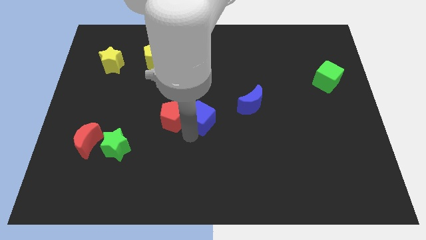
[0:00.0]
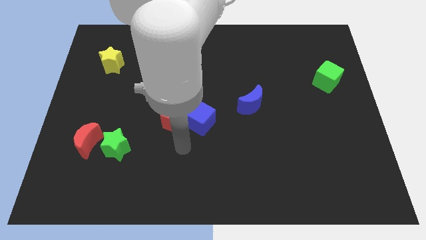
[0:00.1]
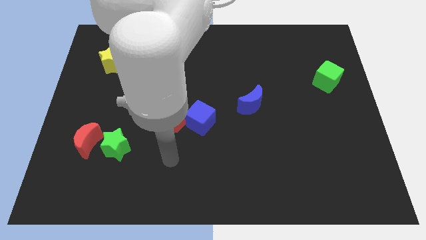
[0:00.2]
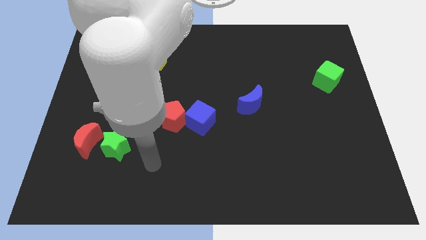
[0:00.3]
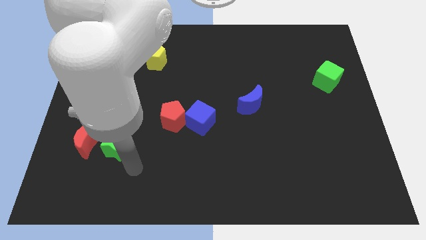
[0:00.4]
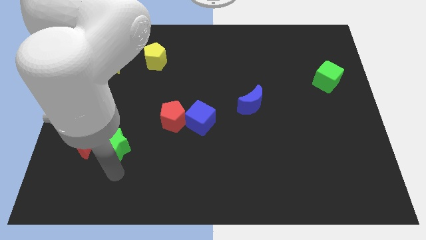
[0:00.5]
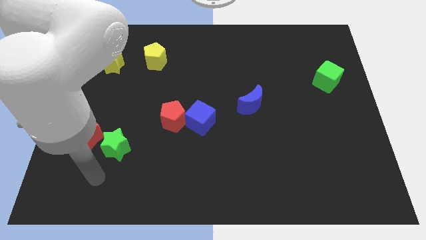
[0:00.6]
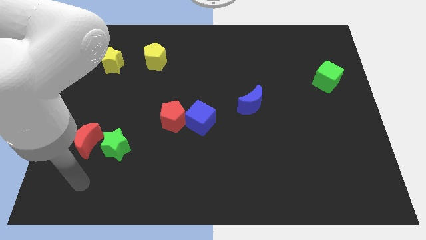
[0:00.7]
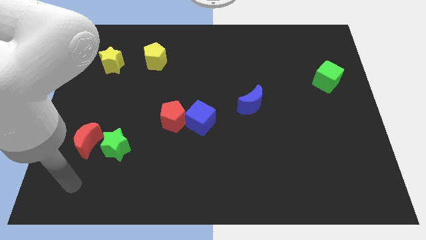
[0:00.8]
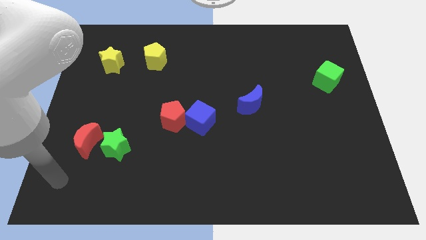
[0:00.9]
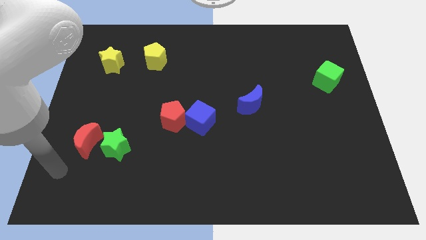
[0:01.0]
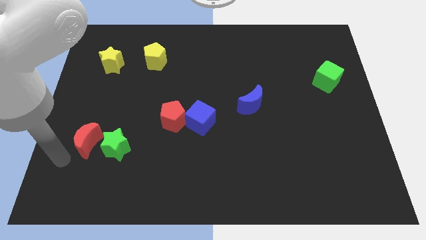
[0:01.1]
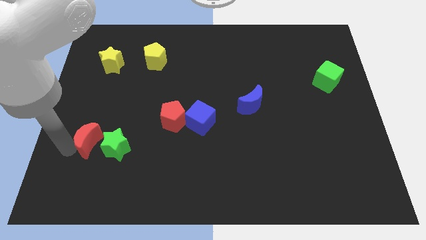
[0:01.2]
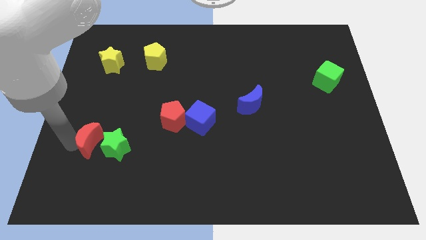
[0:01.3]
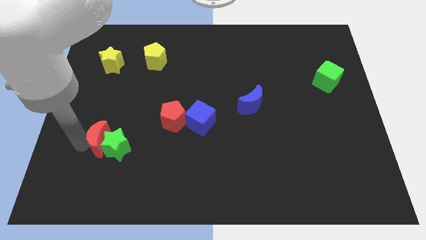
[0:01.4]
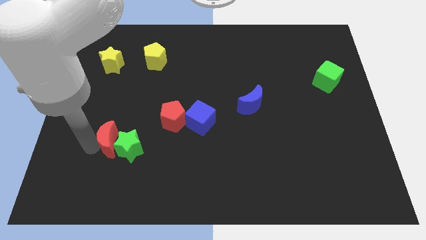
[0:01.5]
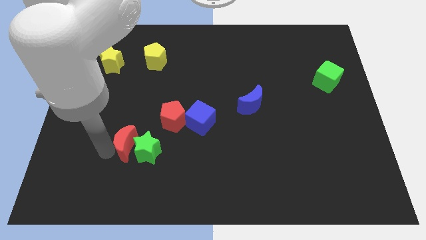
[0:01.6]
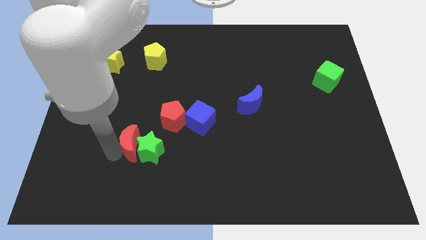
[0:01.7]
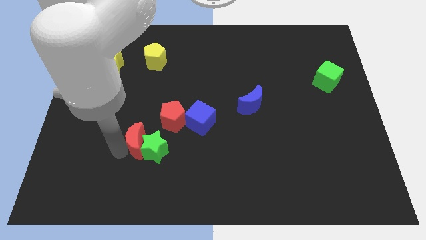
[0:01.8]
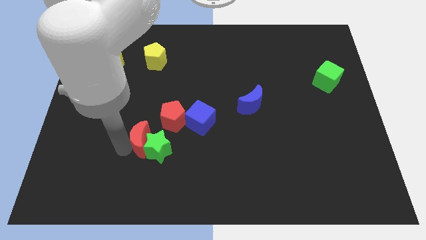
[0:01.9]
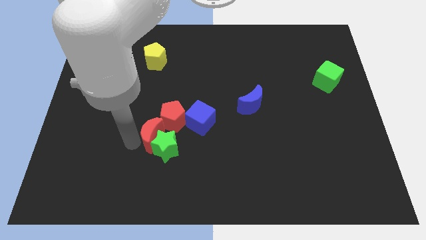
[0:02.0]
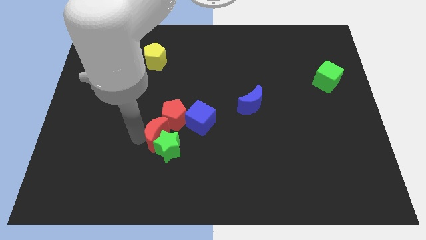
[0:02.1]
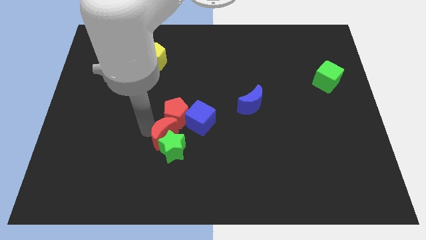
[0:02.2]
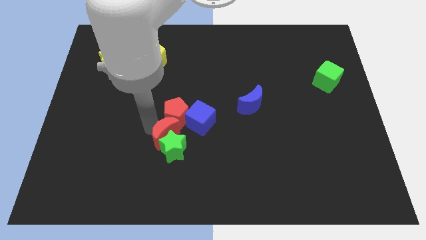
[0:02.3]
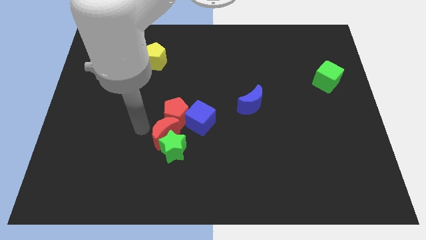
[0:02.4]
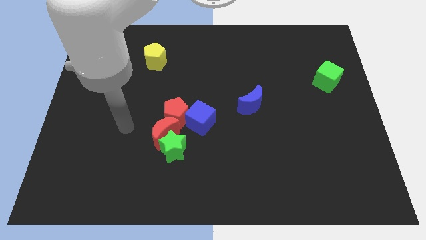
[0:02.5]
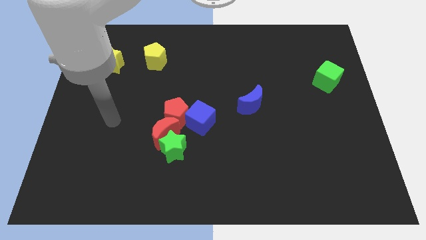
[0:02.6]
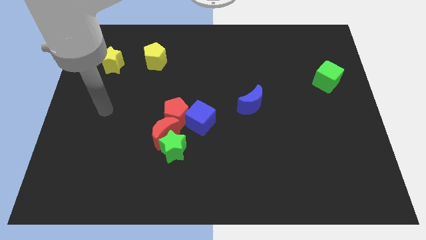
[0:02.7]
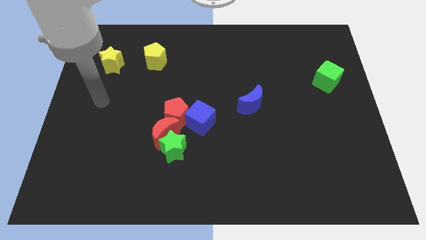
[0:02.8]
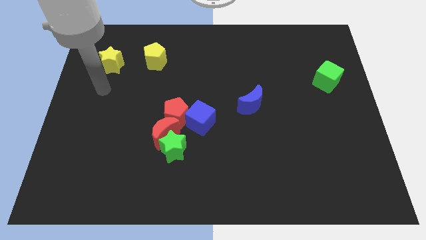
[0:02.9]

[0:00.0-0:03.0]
push the red crescent and green star towards the right side of the board

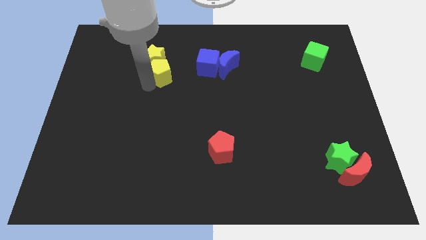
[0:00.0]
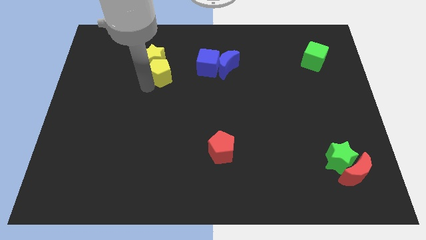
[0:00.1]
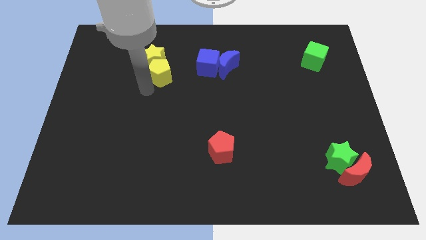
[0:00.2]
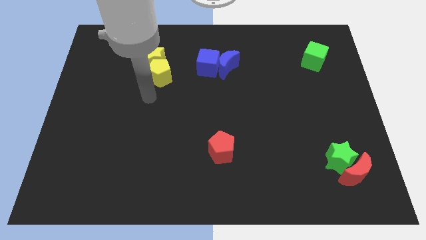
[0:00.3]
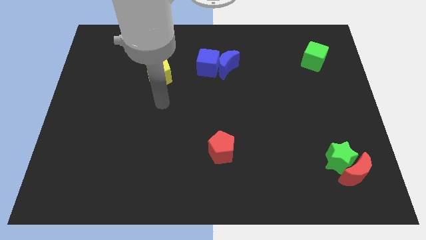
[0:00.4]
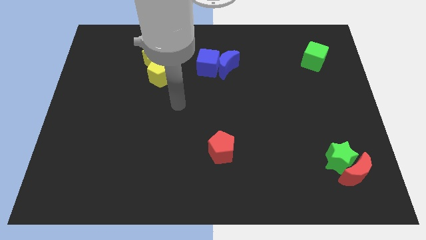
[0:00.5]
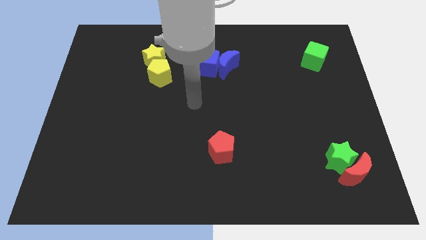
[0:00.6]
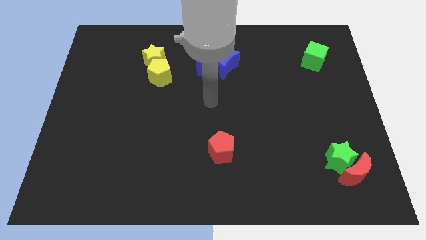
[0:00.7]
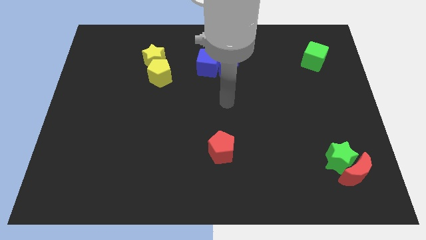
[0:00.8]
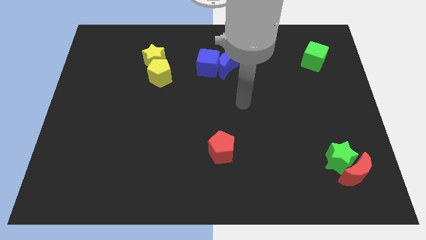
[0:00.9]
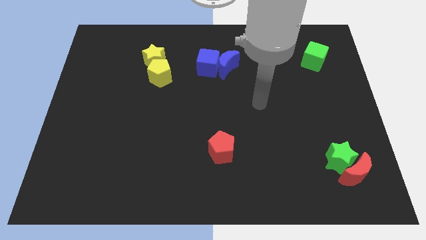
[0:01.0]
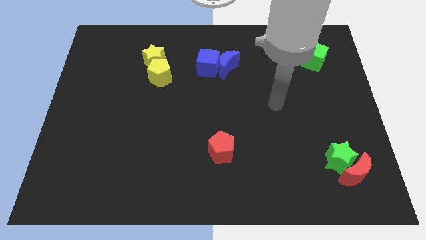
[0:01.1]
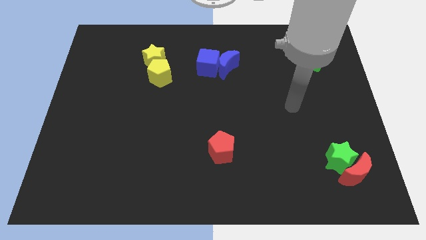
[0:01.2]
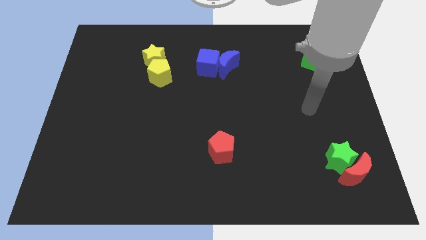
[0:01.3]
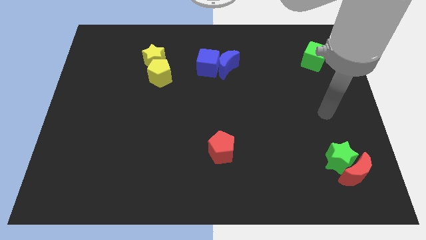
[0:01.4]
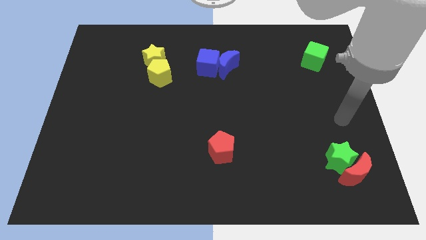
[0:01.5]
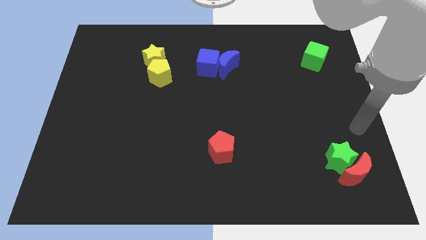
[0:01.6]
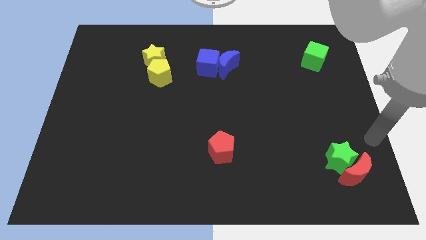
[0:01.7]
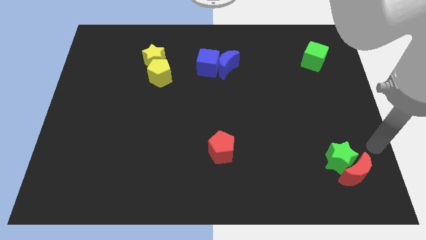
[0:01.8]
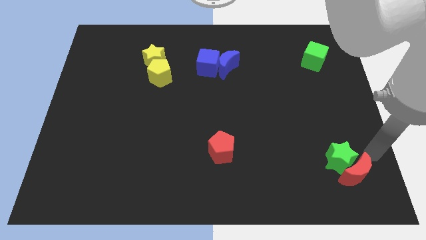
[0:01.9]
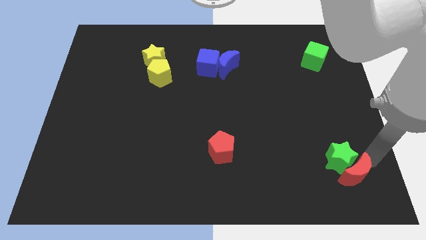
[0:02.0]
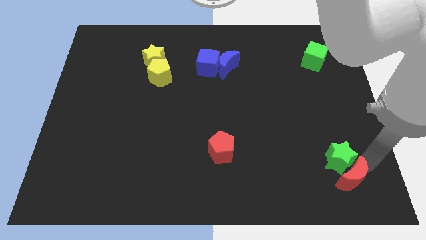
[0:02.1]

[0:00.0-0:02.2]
move the arm away from the yellow blocks

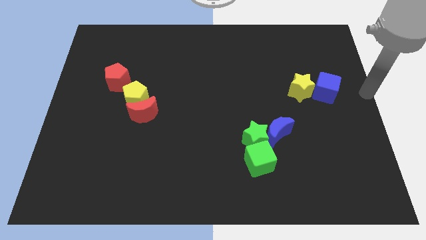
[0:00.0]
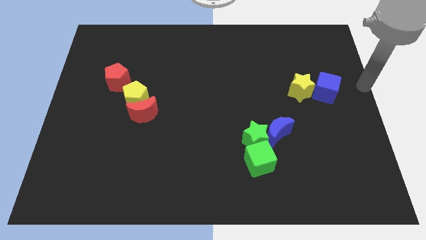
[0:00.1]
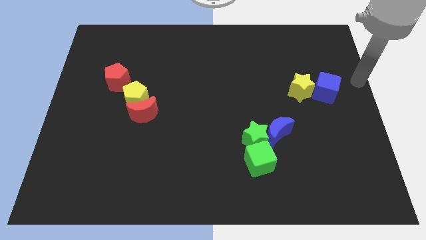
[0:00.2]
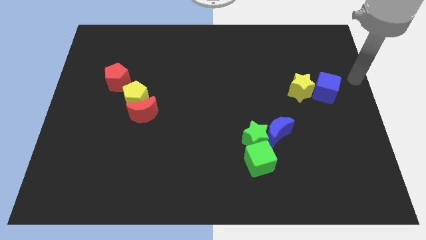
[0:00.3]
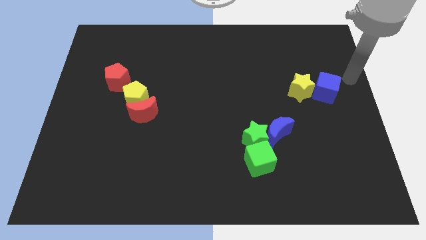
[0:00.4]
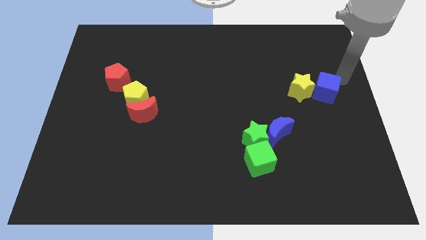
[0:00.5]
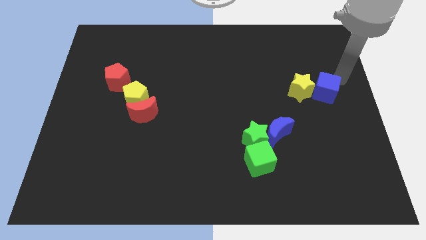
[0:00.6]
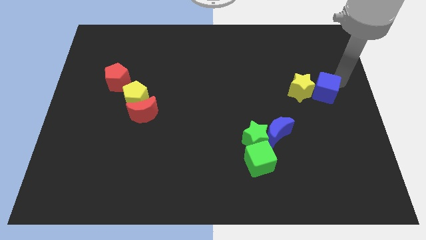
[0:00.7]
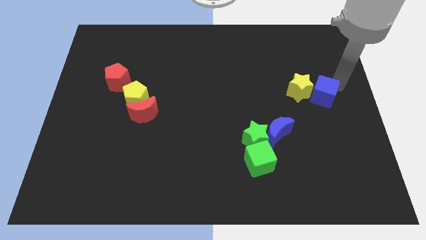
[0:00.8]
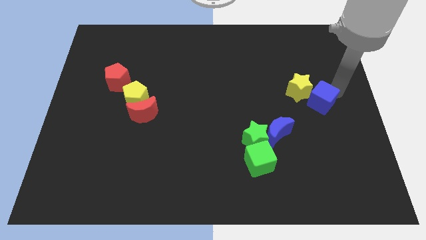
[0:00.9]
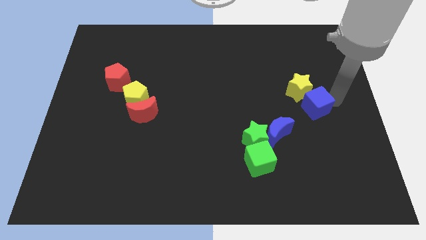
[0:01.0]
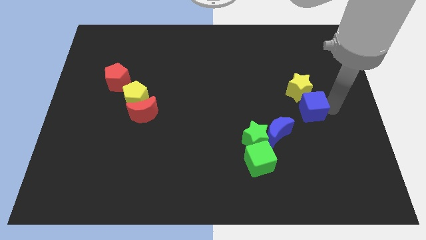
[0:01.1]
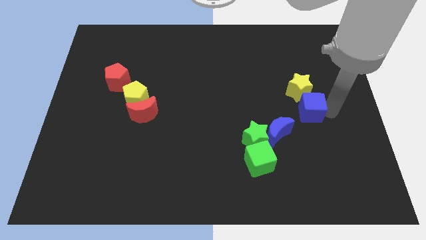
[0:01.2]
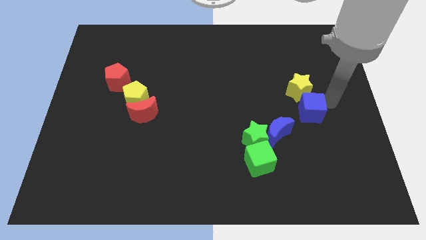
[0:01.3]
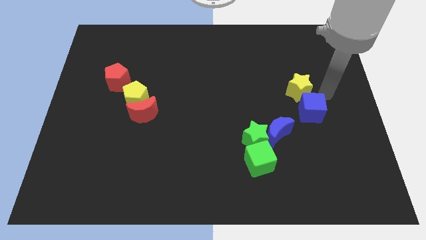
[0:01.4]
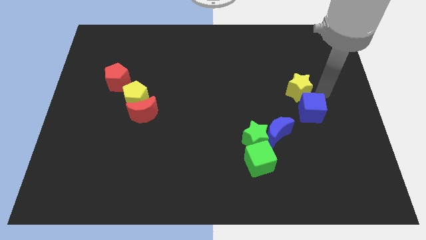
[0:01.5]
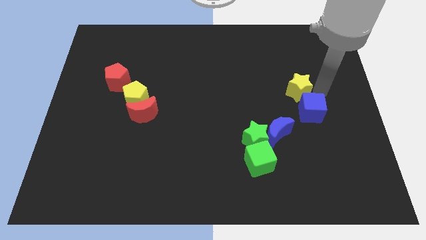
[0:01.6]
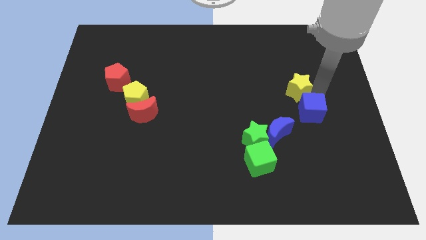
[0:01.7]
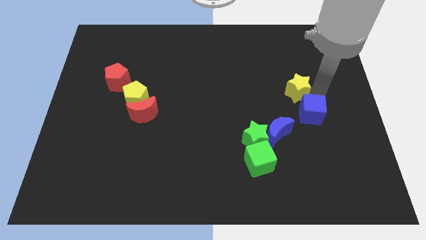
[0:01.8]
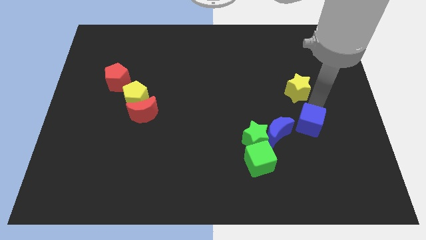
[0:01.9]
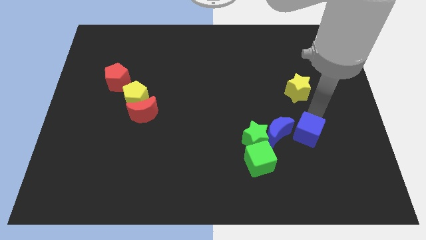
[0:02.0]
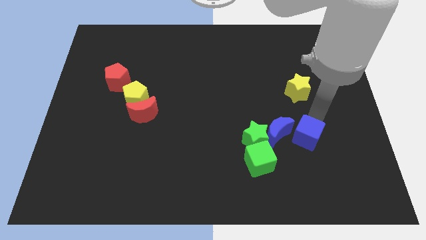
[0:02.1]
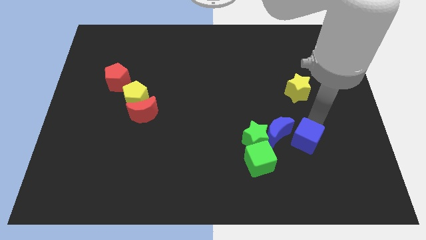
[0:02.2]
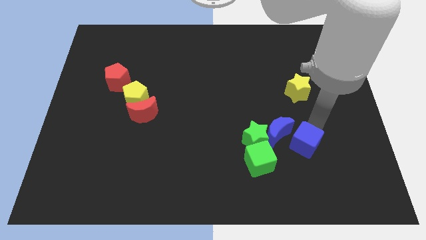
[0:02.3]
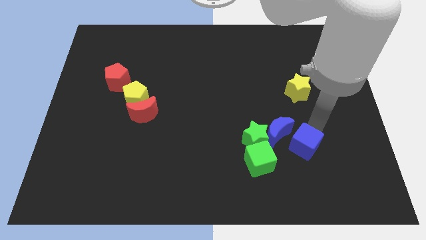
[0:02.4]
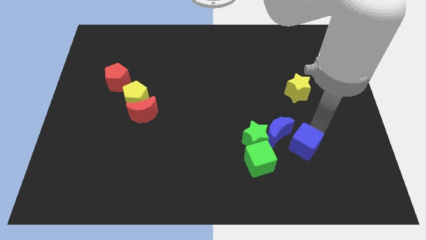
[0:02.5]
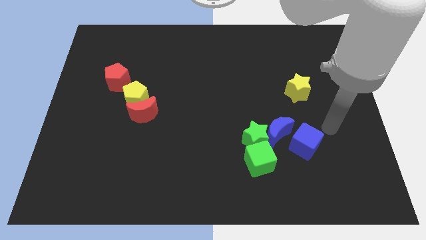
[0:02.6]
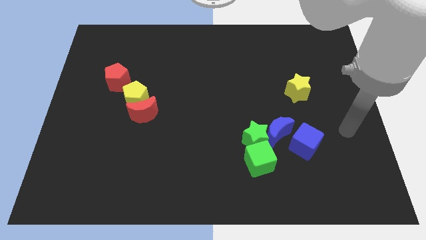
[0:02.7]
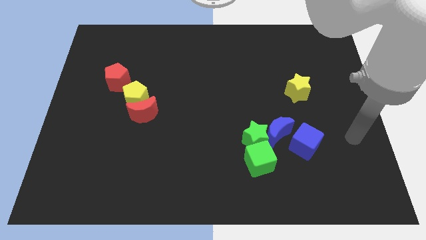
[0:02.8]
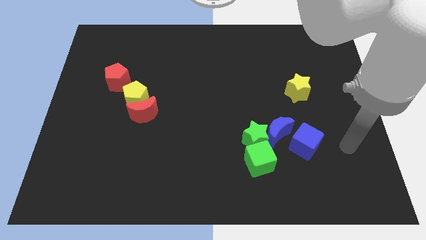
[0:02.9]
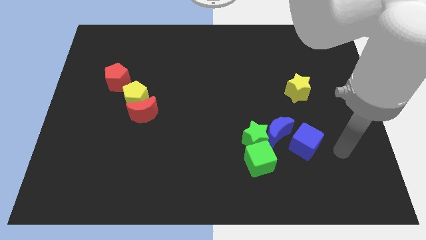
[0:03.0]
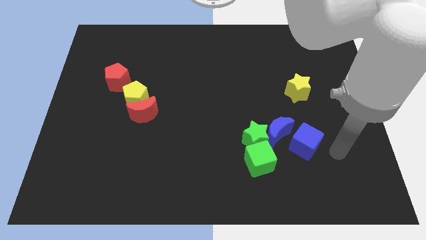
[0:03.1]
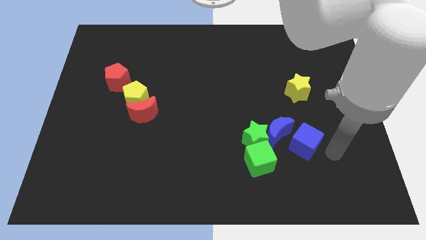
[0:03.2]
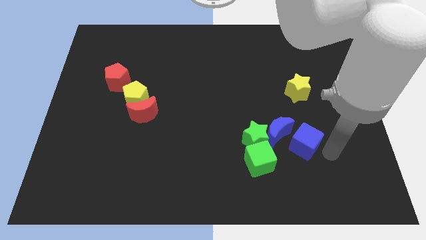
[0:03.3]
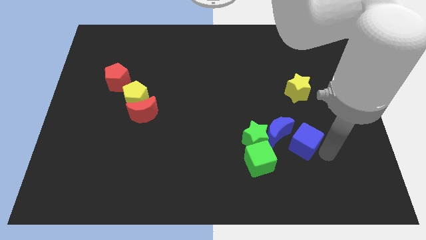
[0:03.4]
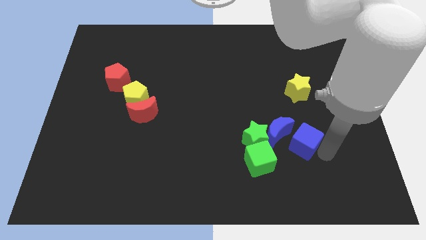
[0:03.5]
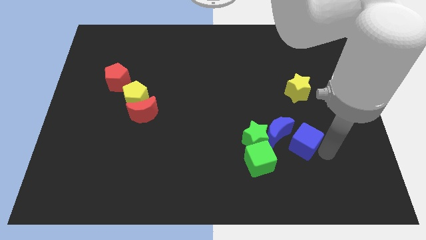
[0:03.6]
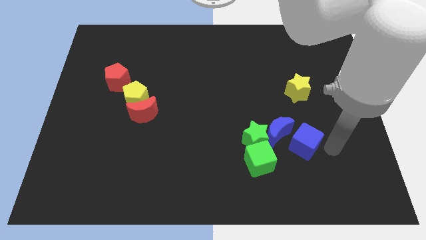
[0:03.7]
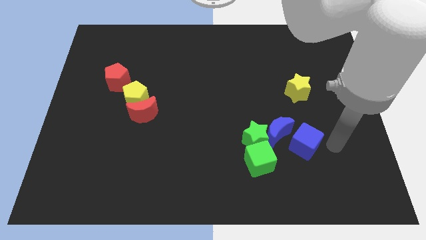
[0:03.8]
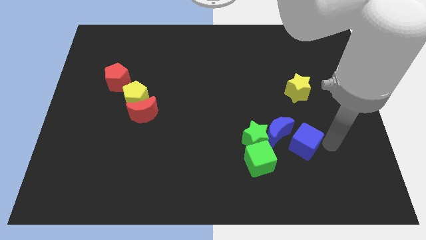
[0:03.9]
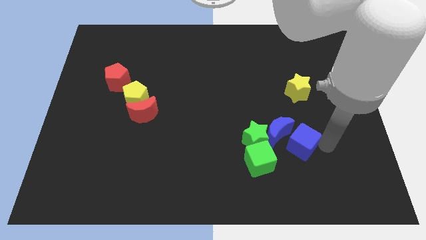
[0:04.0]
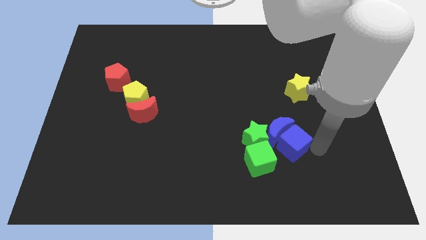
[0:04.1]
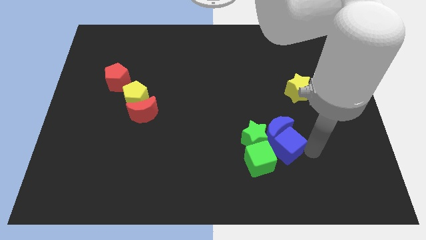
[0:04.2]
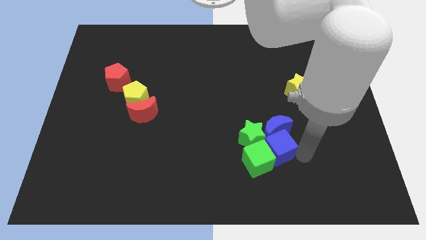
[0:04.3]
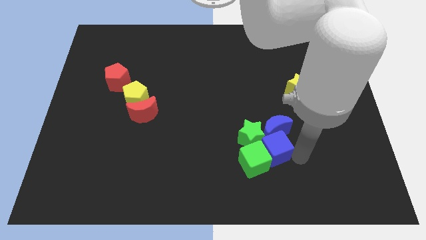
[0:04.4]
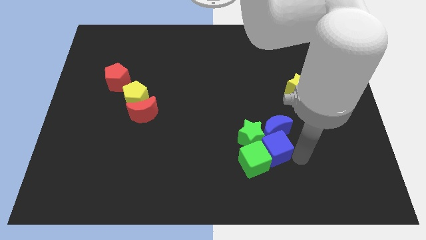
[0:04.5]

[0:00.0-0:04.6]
move the blue cube close to the green cube
